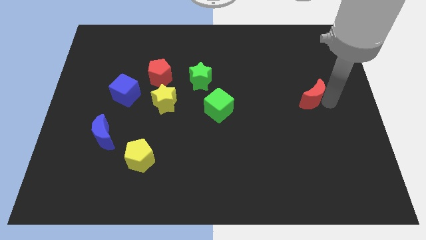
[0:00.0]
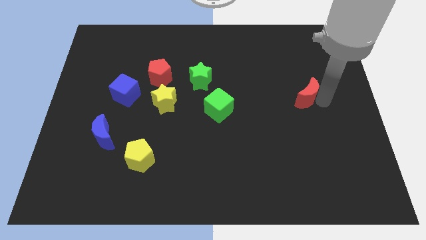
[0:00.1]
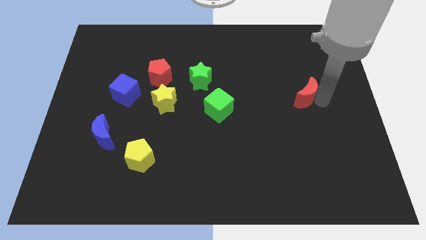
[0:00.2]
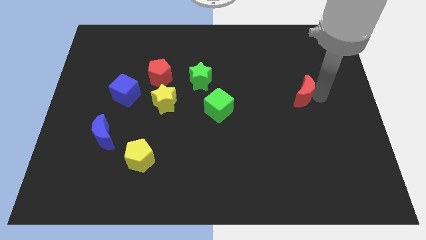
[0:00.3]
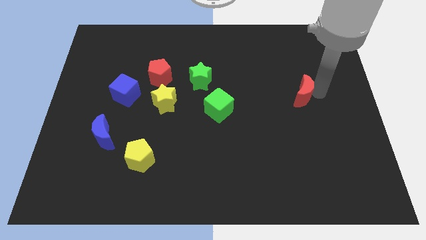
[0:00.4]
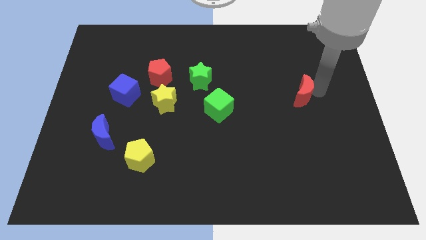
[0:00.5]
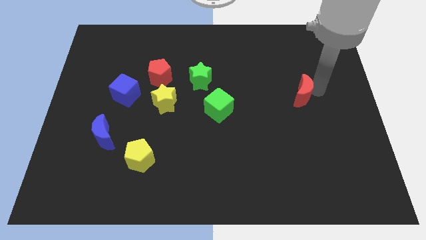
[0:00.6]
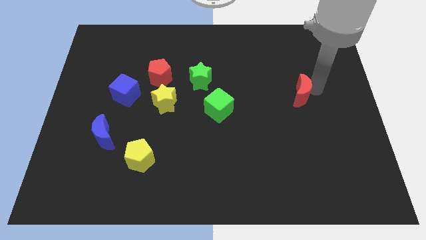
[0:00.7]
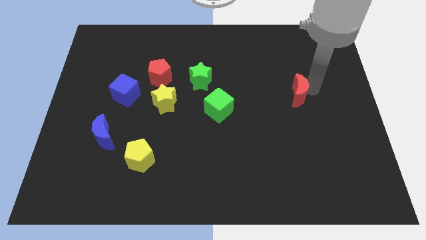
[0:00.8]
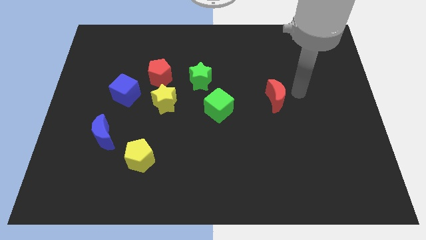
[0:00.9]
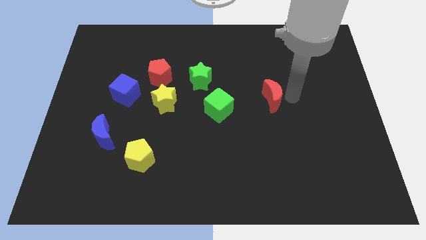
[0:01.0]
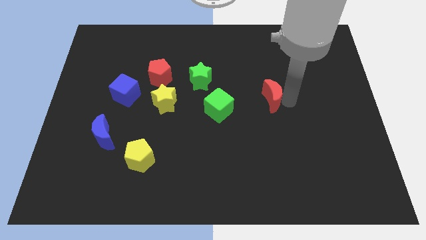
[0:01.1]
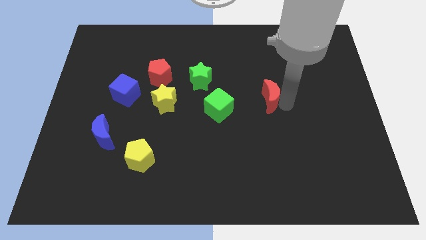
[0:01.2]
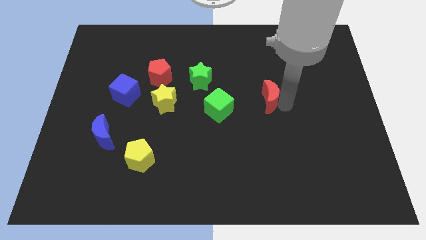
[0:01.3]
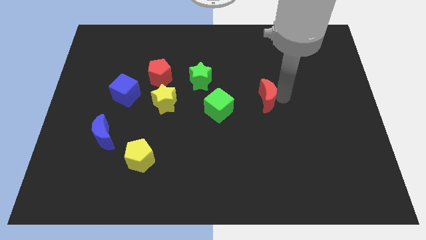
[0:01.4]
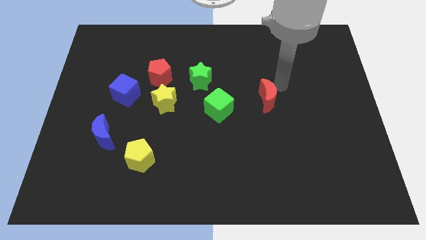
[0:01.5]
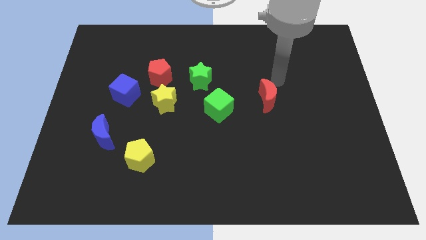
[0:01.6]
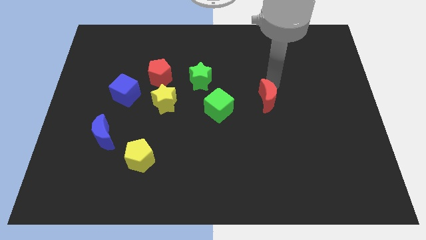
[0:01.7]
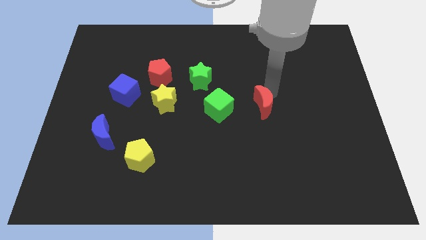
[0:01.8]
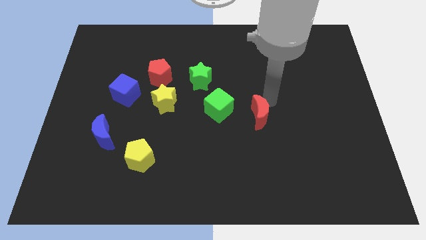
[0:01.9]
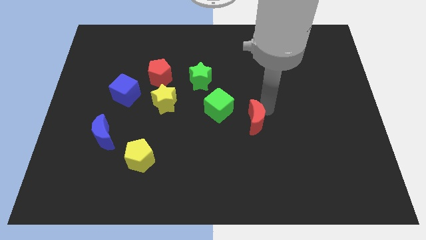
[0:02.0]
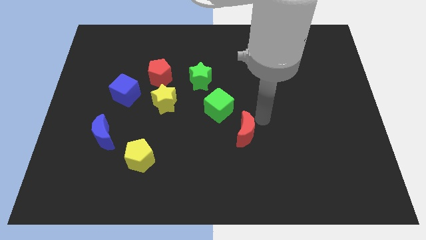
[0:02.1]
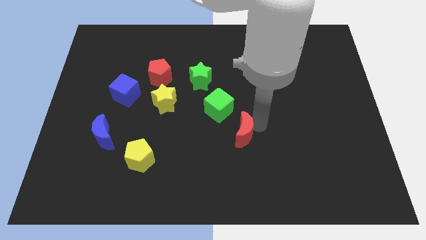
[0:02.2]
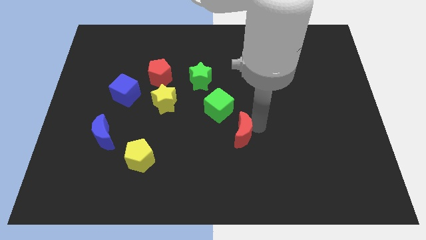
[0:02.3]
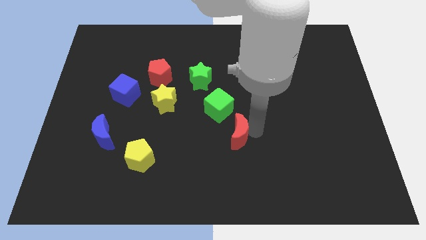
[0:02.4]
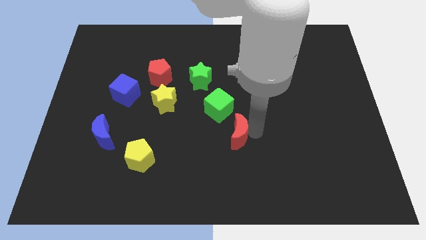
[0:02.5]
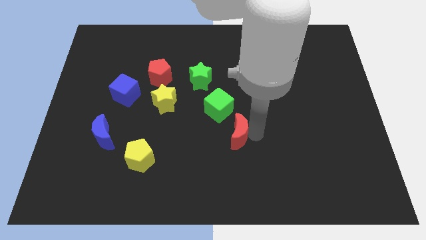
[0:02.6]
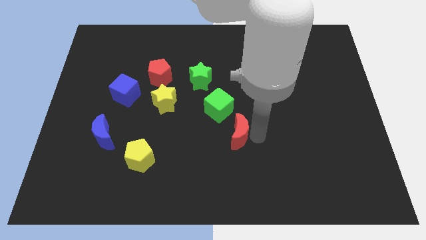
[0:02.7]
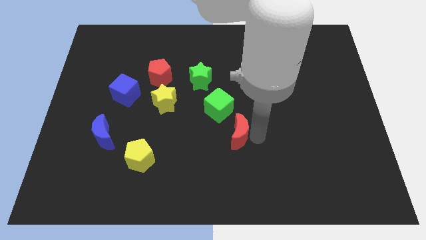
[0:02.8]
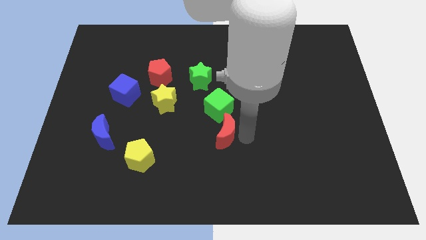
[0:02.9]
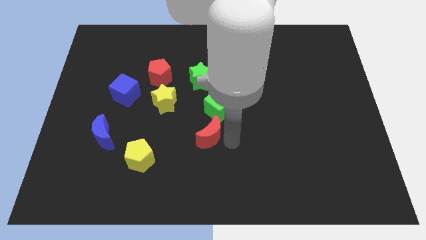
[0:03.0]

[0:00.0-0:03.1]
push red crescent below green cube

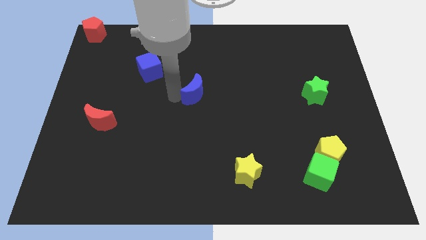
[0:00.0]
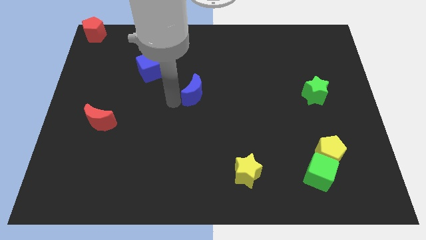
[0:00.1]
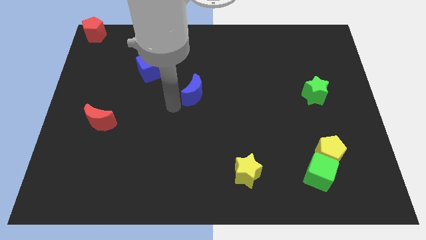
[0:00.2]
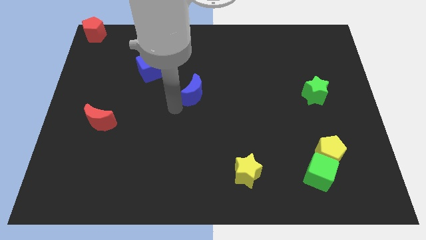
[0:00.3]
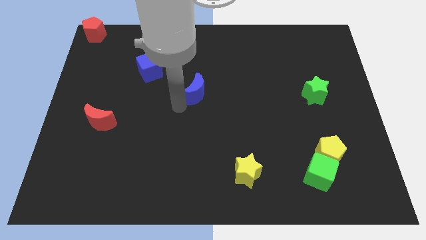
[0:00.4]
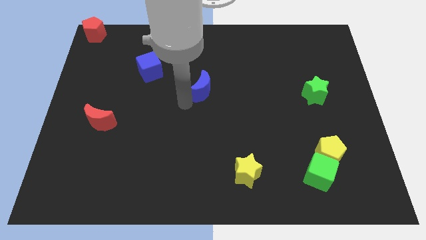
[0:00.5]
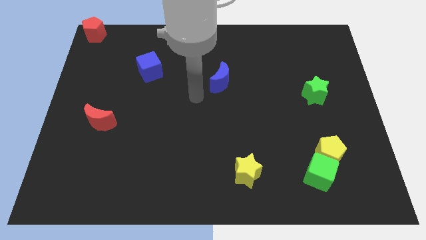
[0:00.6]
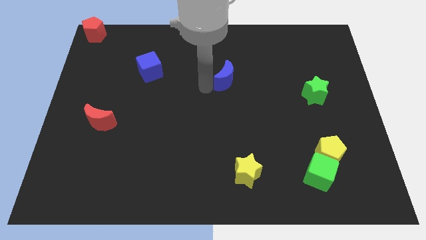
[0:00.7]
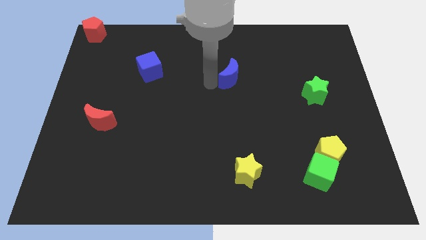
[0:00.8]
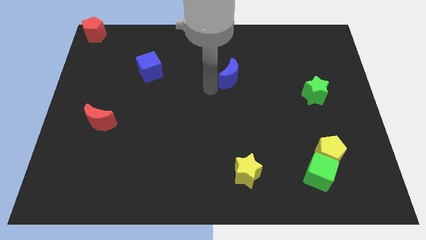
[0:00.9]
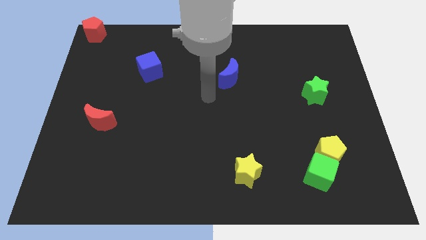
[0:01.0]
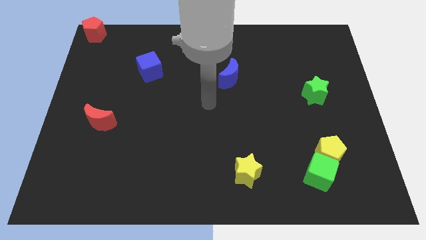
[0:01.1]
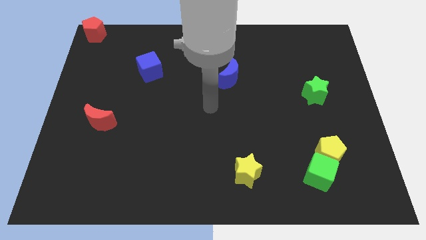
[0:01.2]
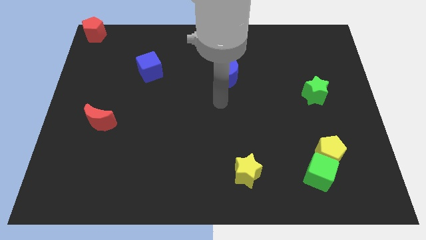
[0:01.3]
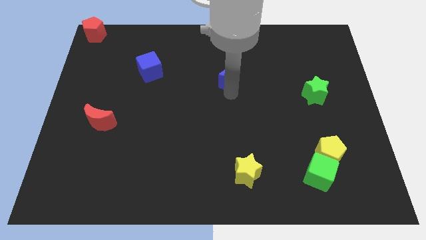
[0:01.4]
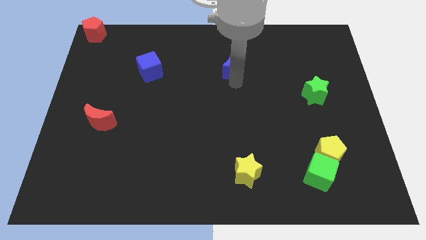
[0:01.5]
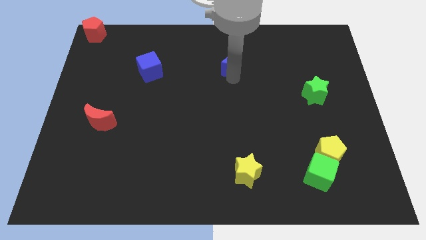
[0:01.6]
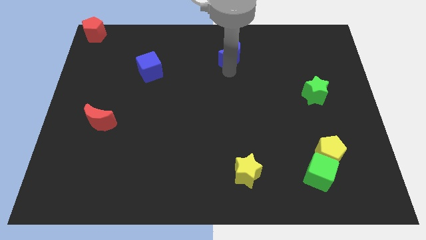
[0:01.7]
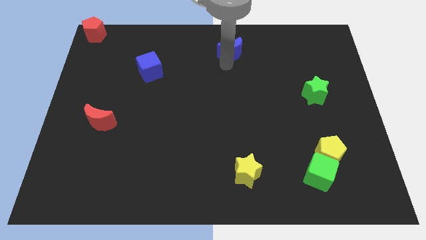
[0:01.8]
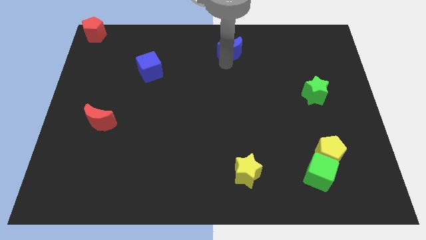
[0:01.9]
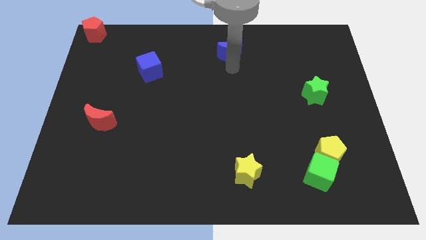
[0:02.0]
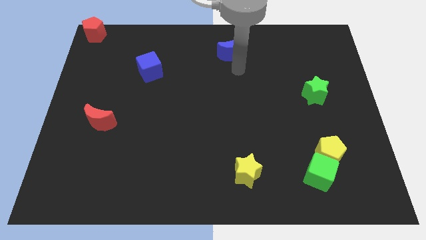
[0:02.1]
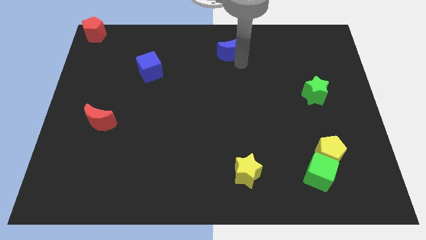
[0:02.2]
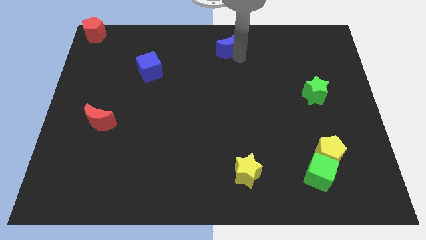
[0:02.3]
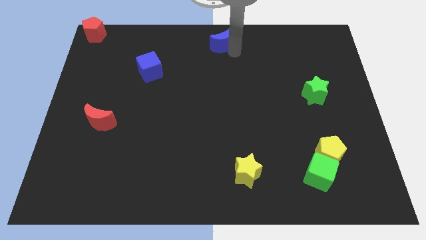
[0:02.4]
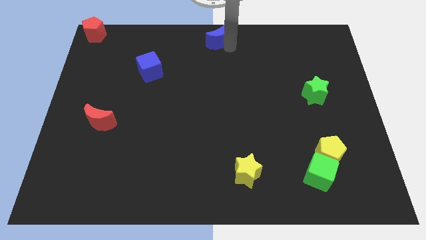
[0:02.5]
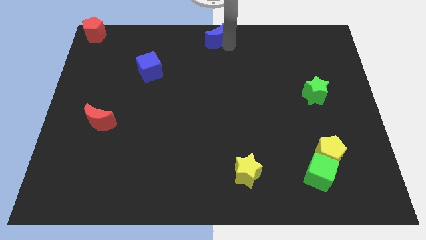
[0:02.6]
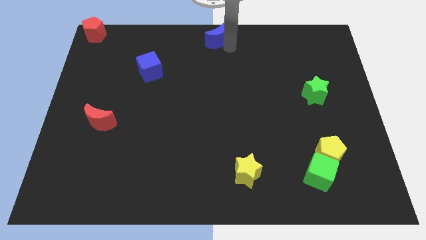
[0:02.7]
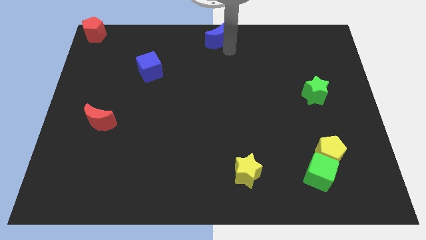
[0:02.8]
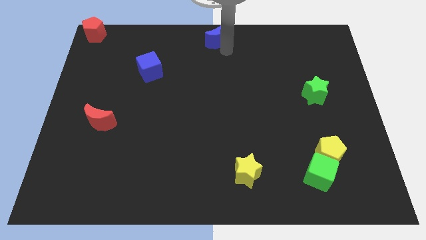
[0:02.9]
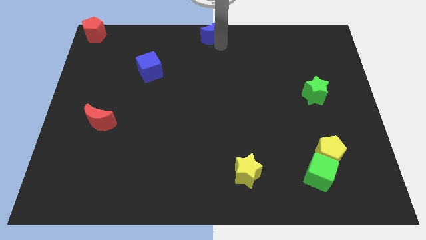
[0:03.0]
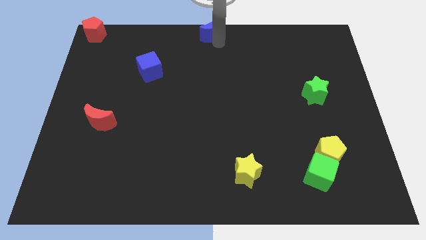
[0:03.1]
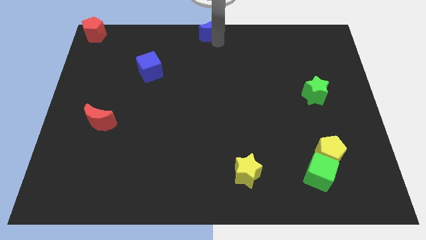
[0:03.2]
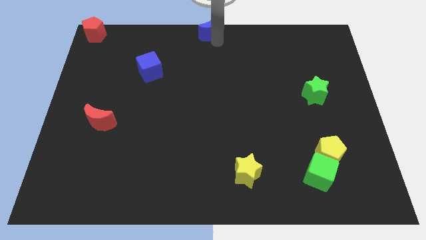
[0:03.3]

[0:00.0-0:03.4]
move blue moon at the top center of the board

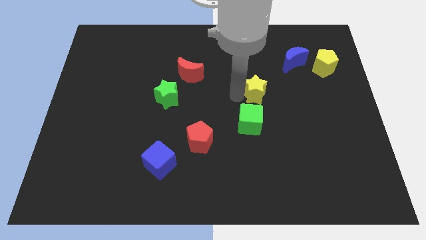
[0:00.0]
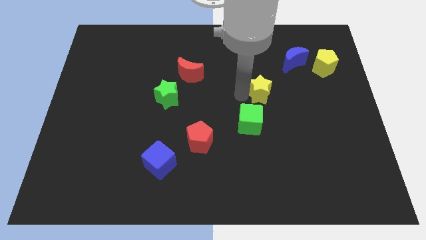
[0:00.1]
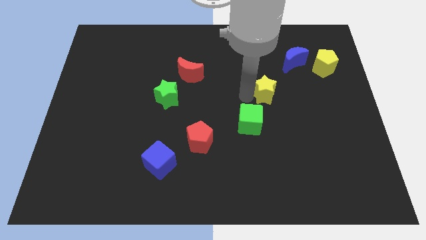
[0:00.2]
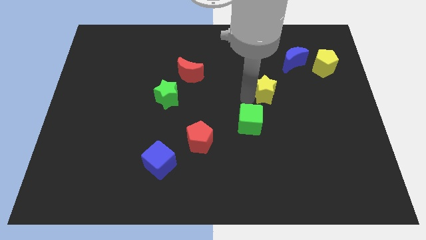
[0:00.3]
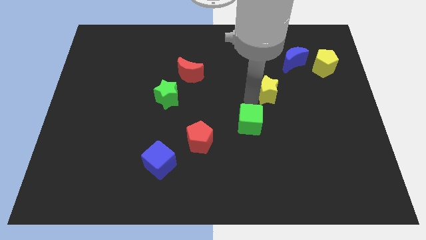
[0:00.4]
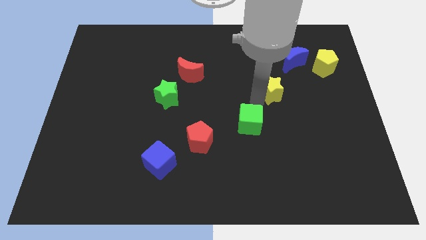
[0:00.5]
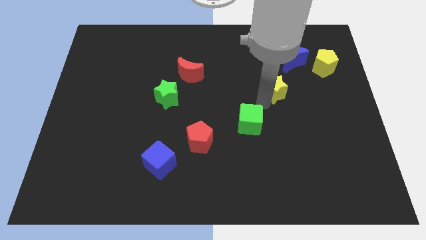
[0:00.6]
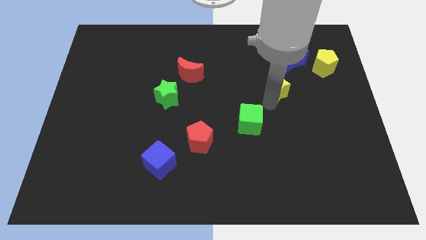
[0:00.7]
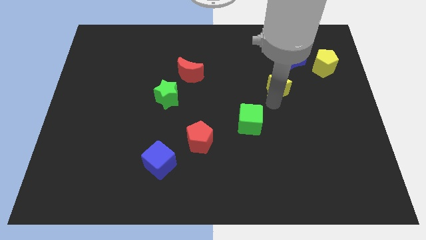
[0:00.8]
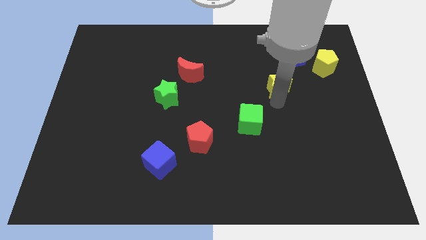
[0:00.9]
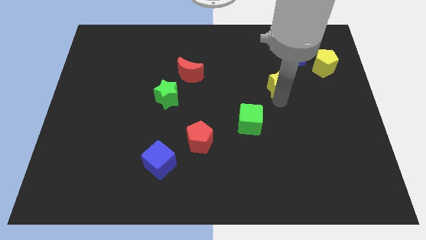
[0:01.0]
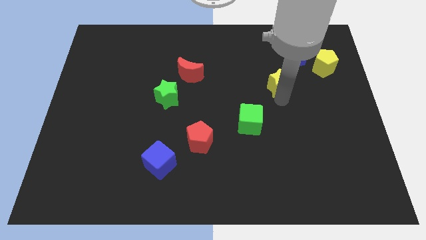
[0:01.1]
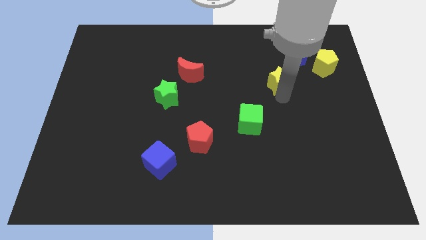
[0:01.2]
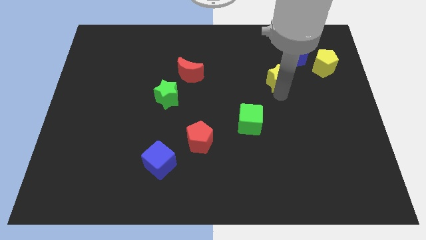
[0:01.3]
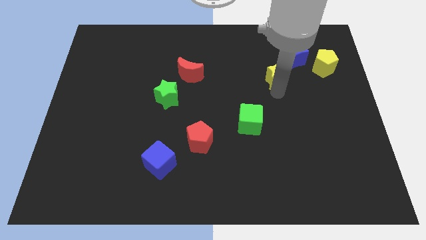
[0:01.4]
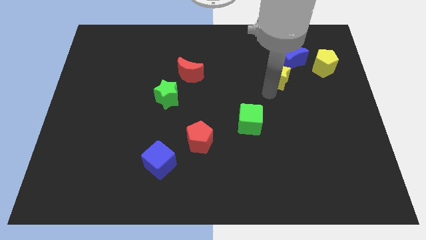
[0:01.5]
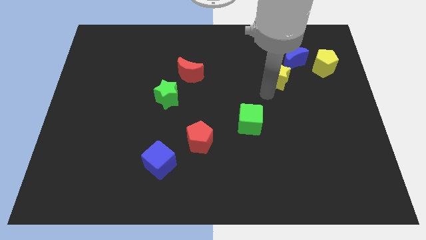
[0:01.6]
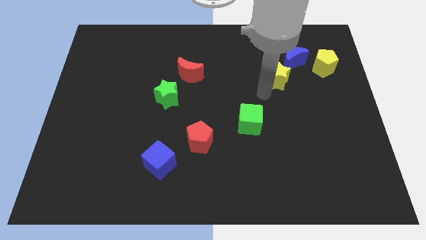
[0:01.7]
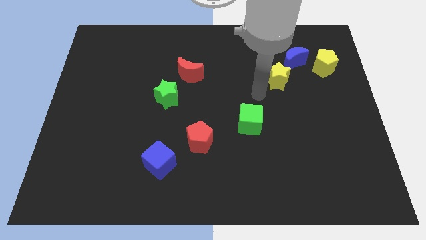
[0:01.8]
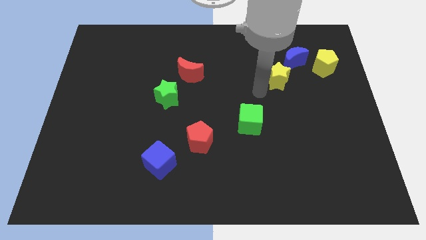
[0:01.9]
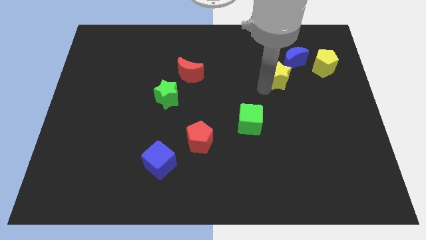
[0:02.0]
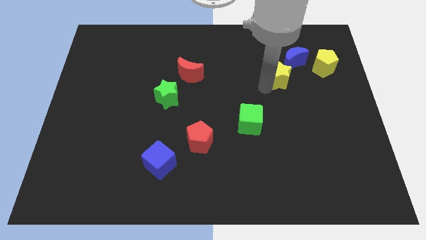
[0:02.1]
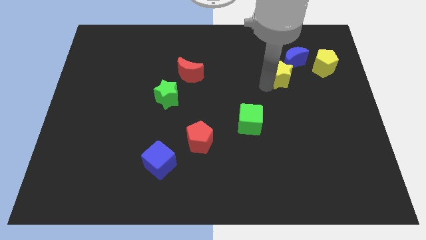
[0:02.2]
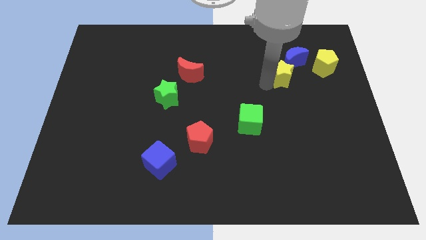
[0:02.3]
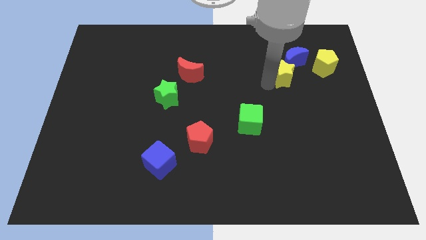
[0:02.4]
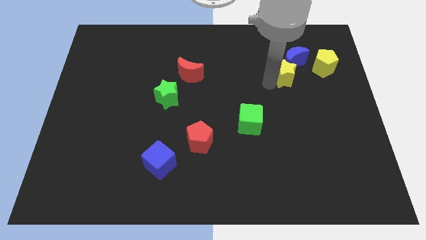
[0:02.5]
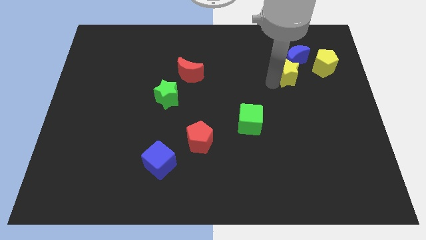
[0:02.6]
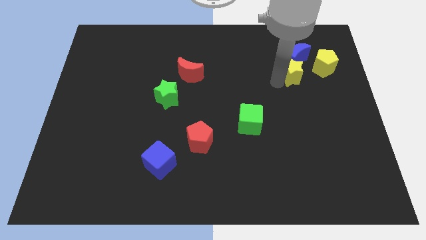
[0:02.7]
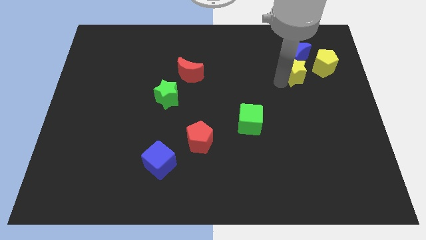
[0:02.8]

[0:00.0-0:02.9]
push the yellow star into the blue crescent
